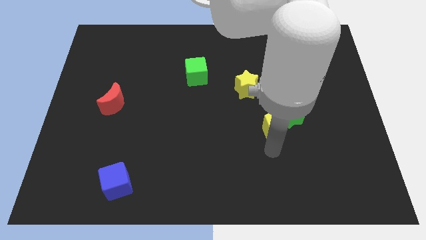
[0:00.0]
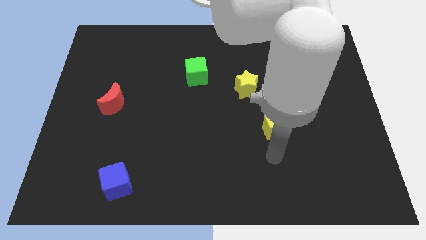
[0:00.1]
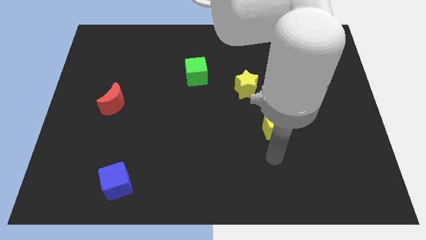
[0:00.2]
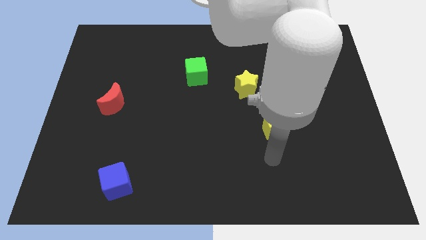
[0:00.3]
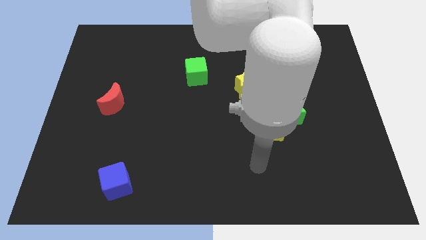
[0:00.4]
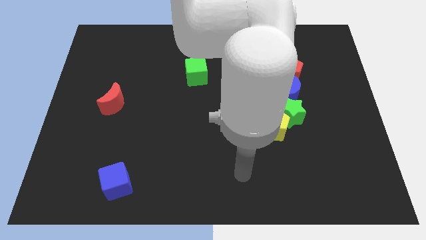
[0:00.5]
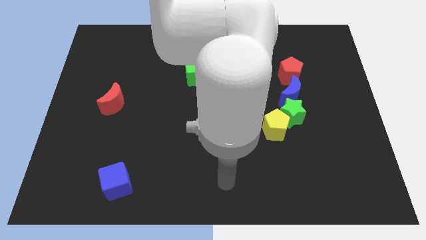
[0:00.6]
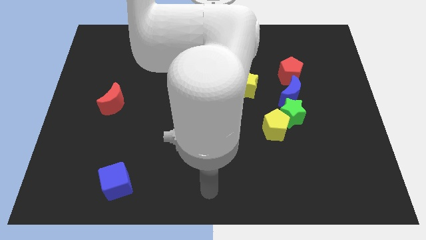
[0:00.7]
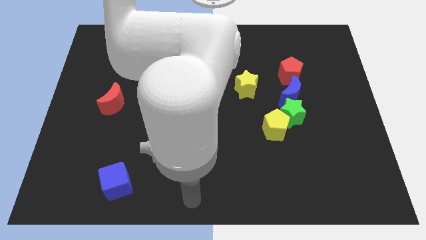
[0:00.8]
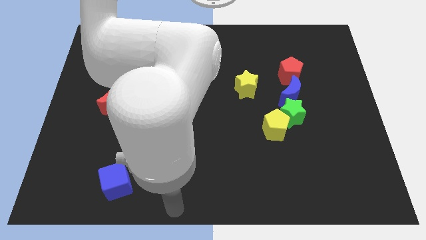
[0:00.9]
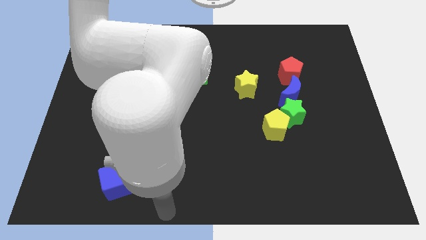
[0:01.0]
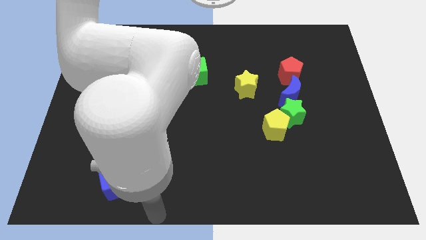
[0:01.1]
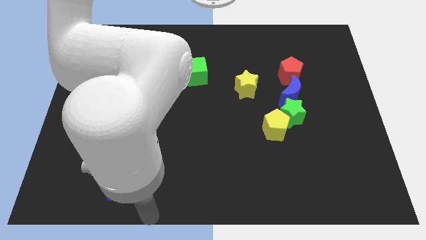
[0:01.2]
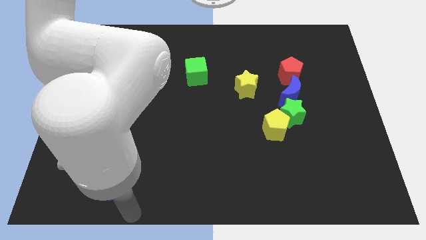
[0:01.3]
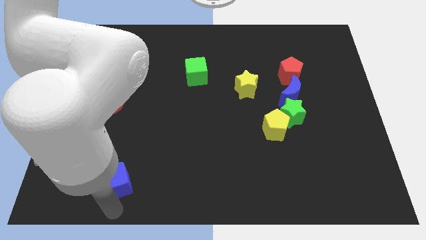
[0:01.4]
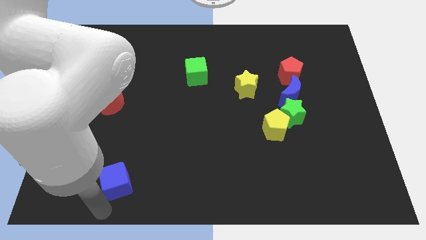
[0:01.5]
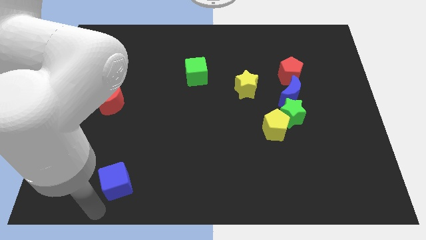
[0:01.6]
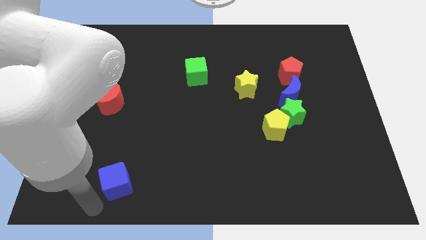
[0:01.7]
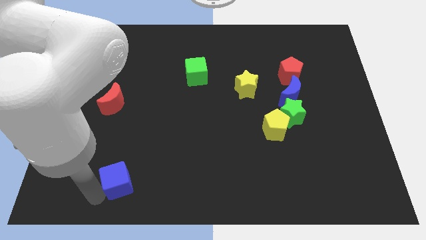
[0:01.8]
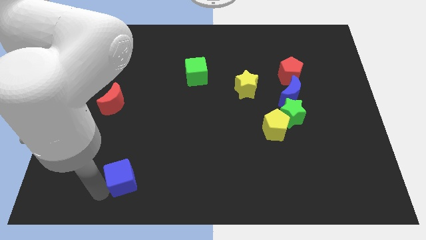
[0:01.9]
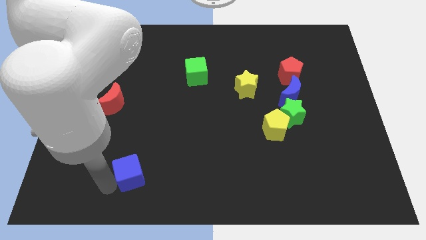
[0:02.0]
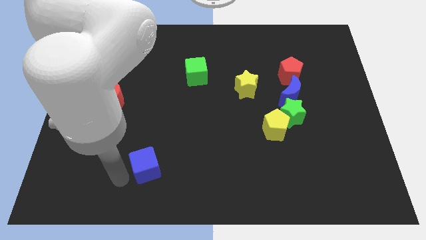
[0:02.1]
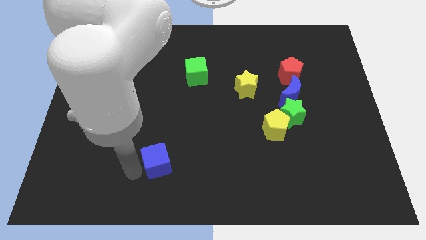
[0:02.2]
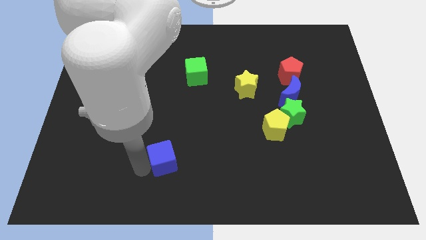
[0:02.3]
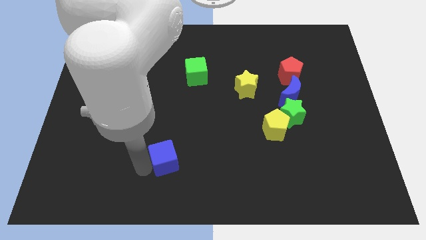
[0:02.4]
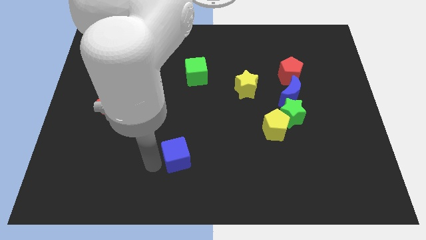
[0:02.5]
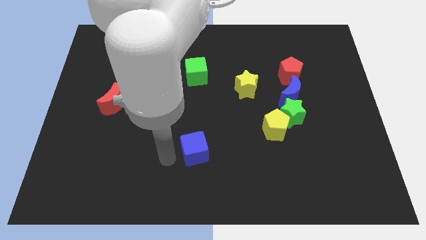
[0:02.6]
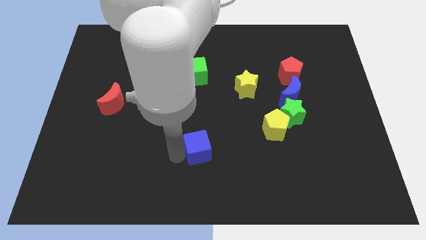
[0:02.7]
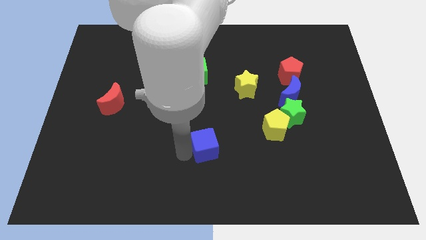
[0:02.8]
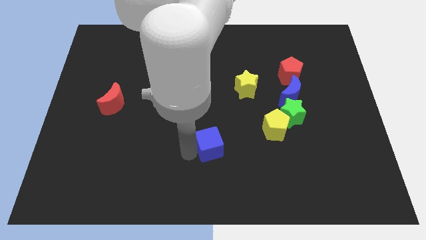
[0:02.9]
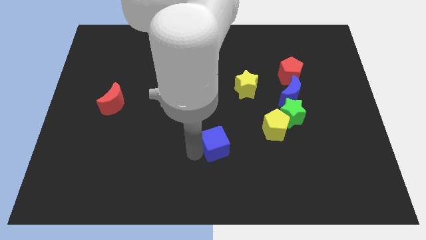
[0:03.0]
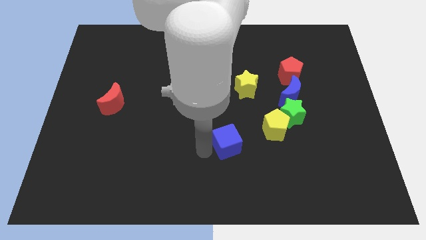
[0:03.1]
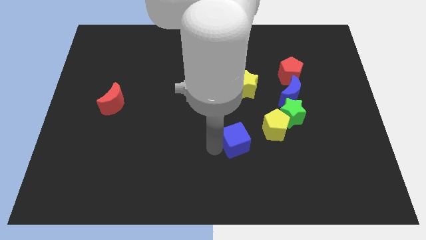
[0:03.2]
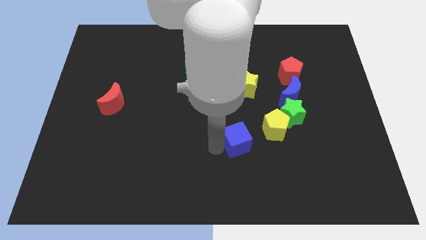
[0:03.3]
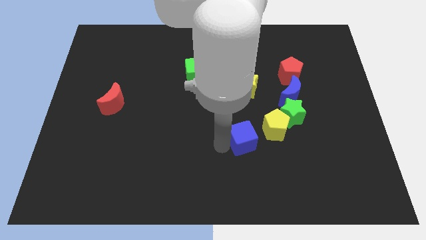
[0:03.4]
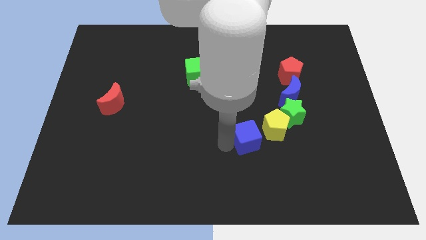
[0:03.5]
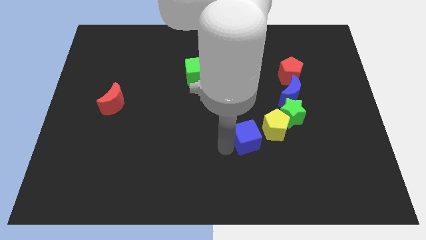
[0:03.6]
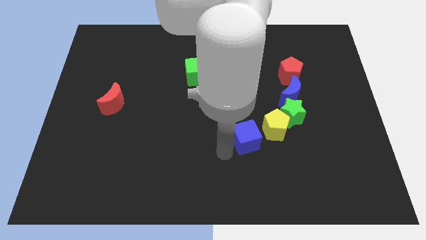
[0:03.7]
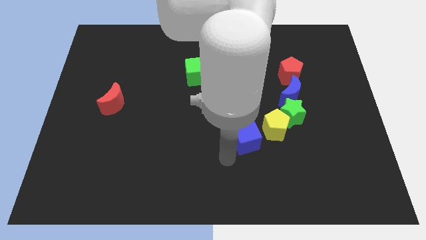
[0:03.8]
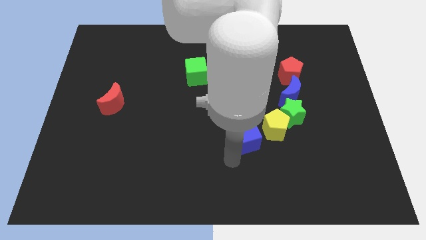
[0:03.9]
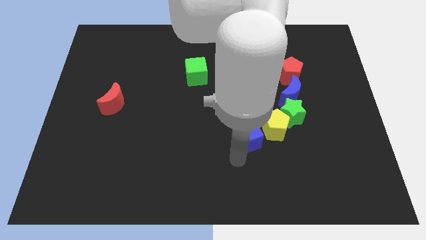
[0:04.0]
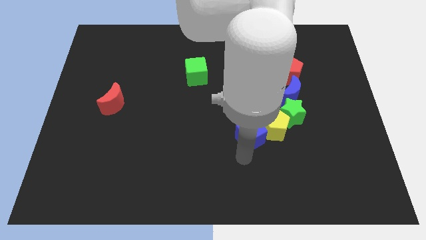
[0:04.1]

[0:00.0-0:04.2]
push blue cube adjacent to the yellow pentagon

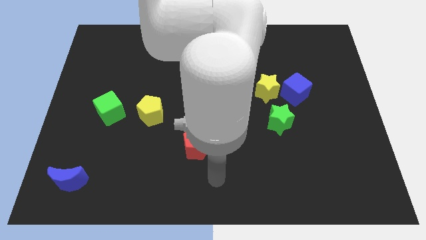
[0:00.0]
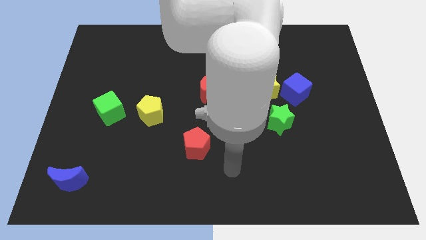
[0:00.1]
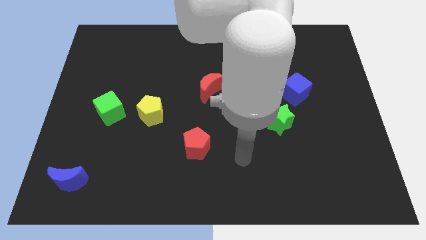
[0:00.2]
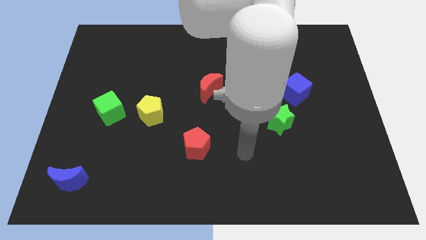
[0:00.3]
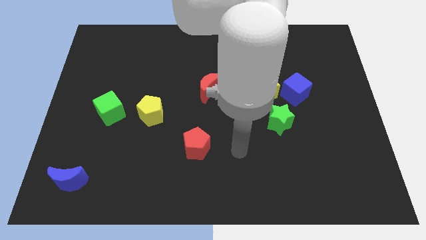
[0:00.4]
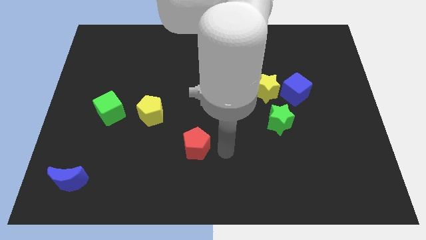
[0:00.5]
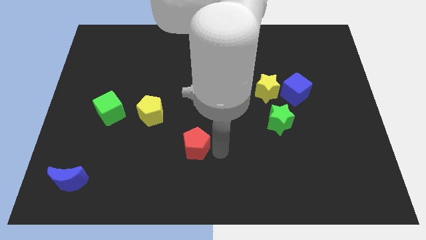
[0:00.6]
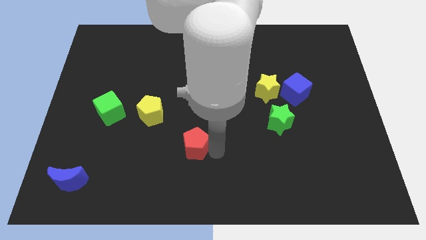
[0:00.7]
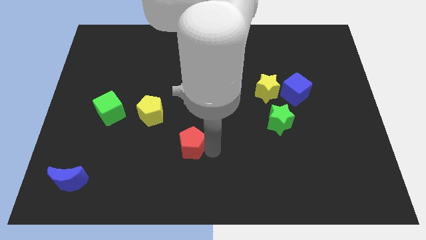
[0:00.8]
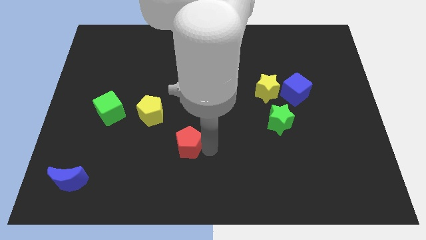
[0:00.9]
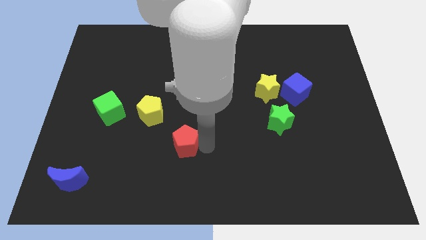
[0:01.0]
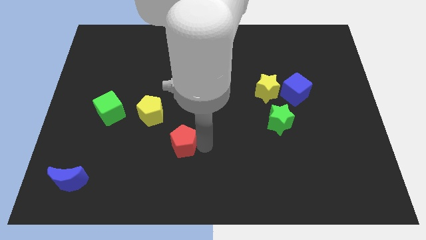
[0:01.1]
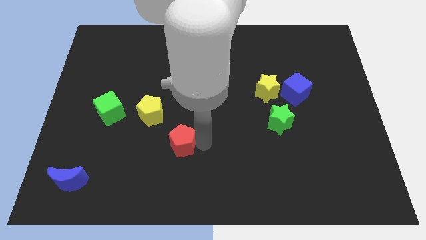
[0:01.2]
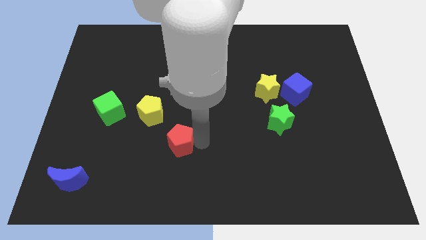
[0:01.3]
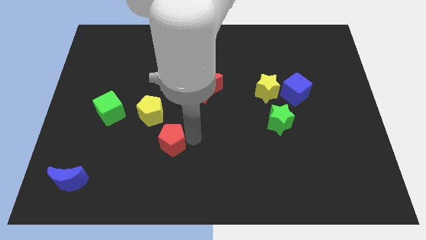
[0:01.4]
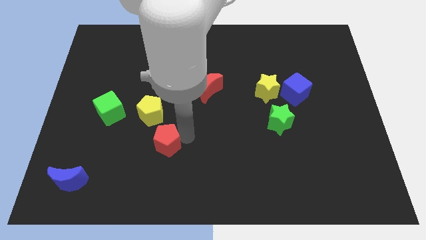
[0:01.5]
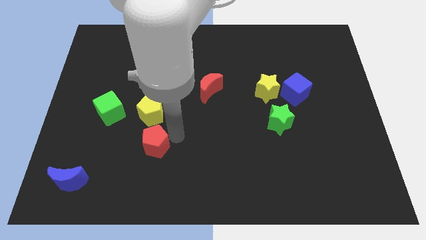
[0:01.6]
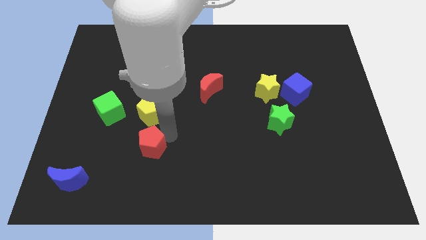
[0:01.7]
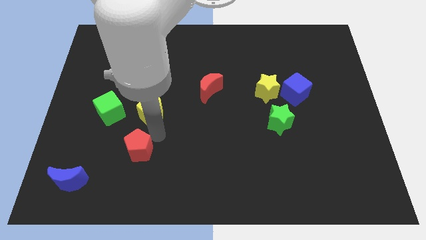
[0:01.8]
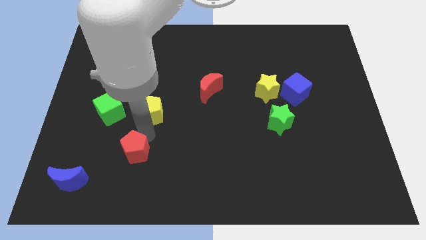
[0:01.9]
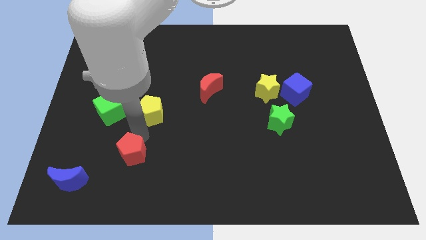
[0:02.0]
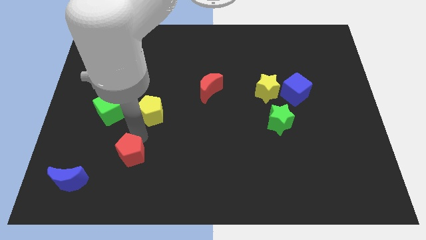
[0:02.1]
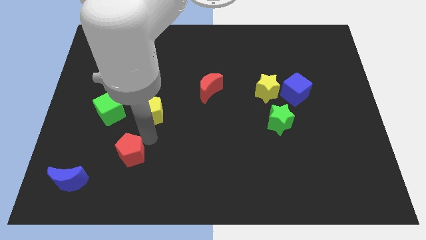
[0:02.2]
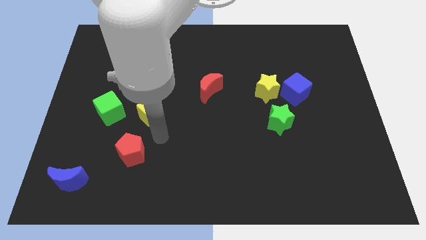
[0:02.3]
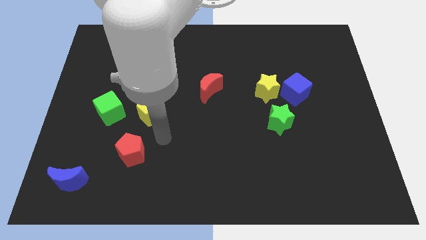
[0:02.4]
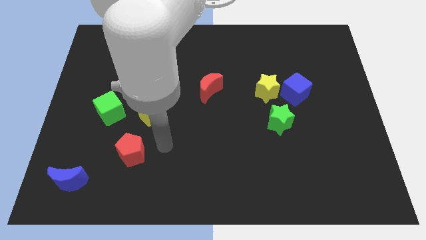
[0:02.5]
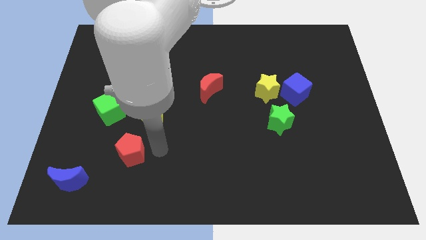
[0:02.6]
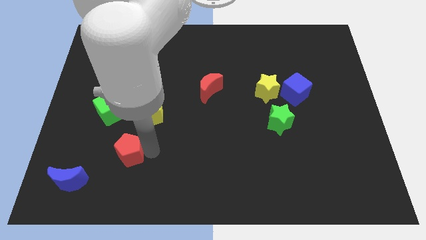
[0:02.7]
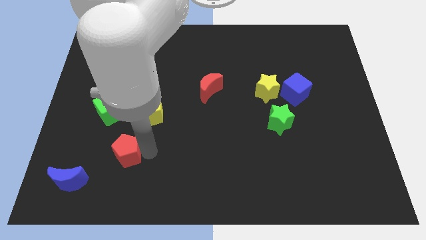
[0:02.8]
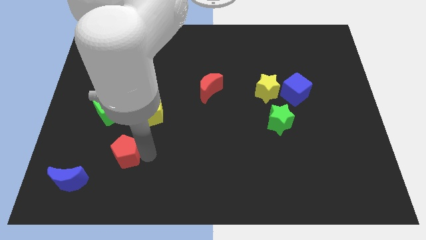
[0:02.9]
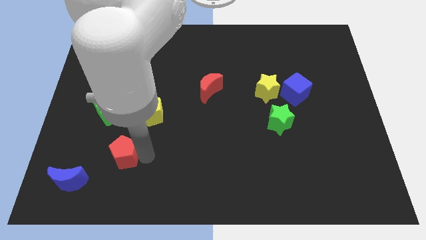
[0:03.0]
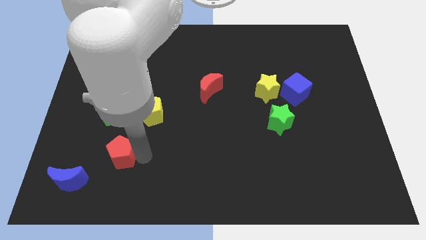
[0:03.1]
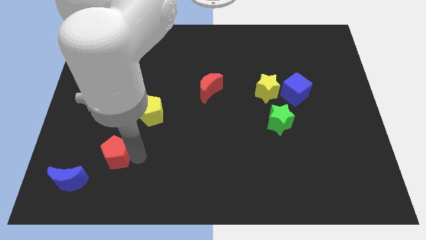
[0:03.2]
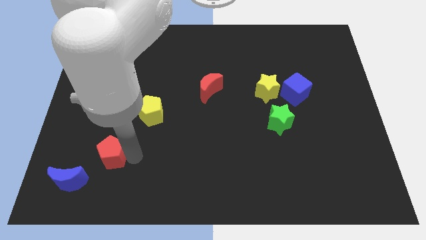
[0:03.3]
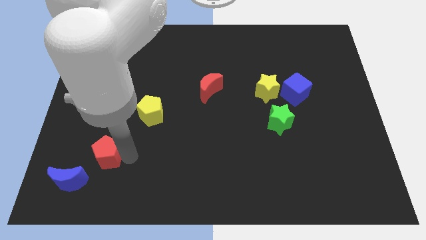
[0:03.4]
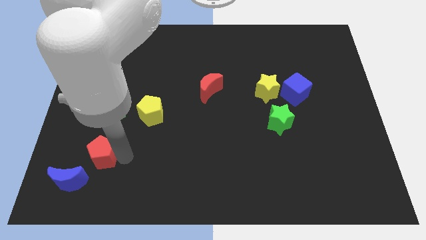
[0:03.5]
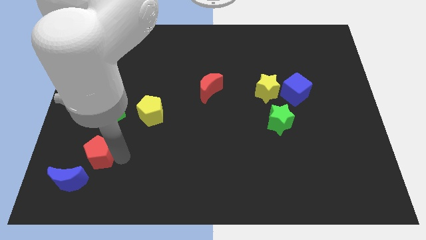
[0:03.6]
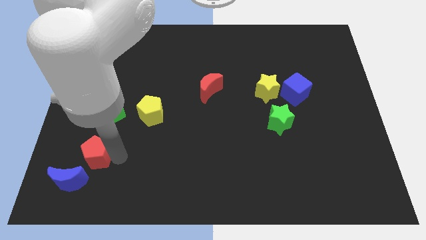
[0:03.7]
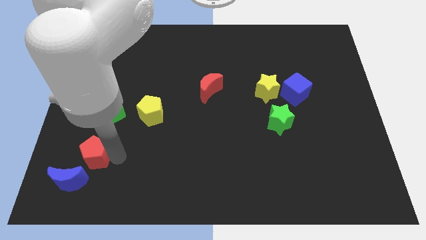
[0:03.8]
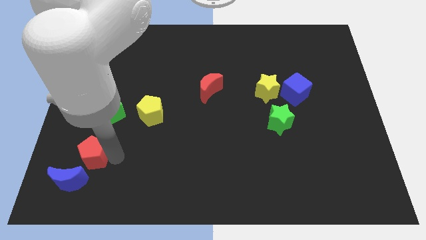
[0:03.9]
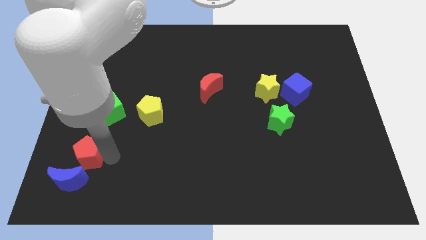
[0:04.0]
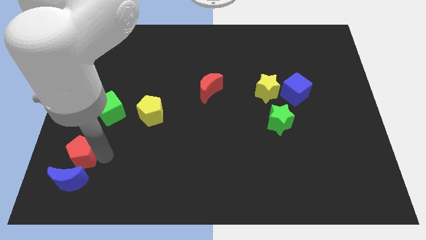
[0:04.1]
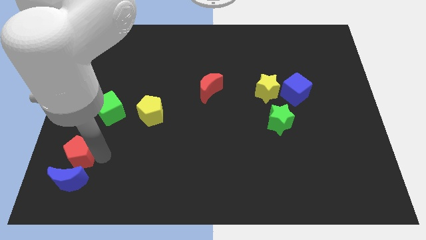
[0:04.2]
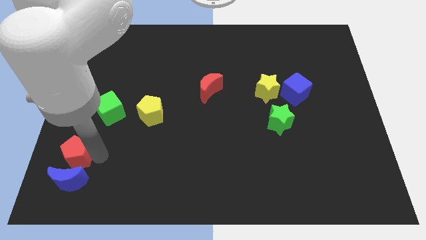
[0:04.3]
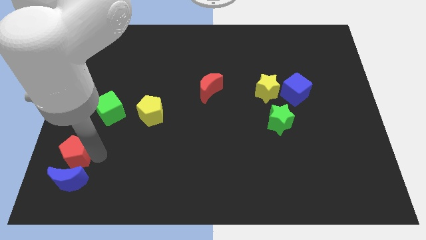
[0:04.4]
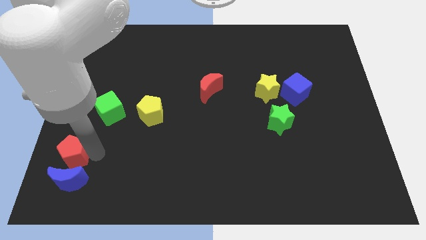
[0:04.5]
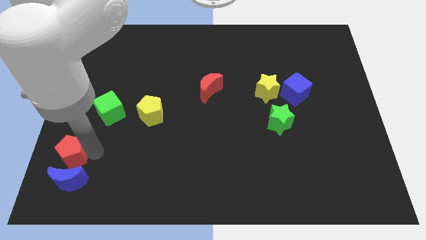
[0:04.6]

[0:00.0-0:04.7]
place the red pentagon above the blue crescent

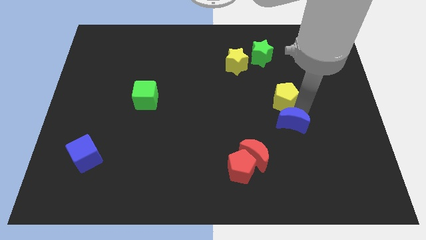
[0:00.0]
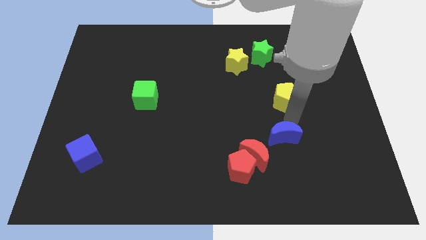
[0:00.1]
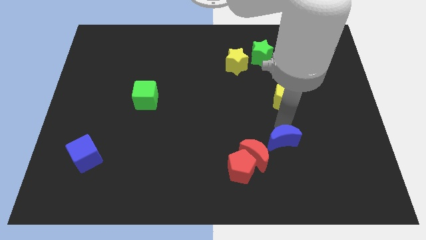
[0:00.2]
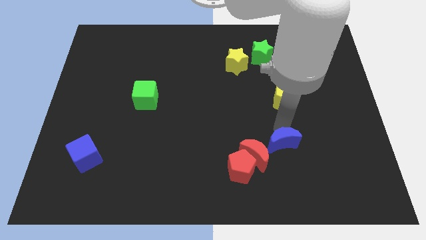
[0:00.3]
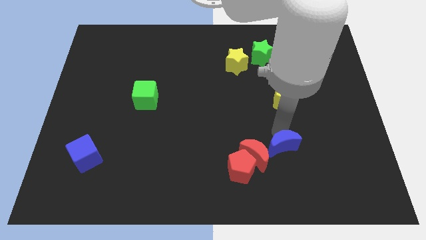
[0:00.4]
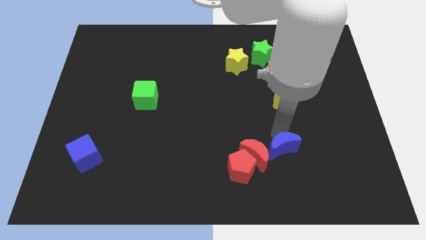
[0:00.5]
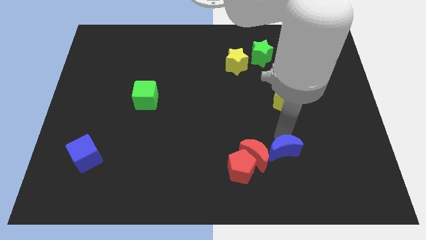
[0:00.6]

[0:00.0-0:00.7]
push the blue crescent away from the yellow pentagon
